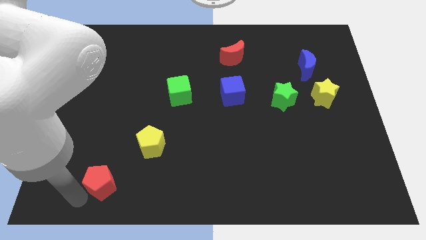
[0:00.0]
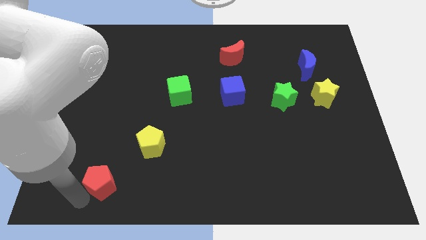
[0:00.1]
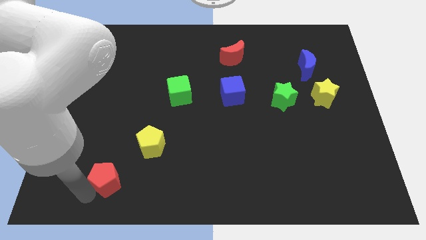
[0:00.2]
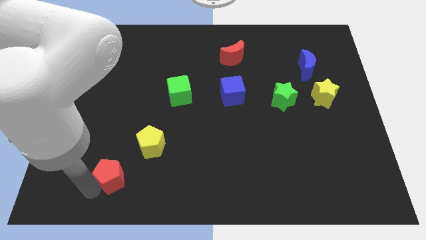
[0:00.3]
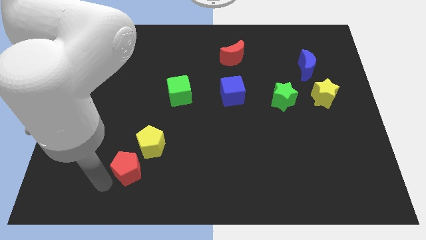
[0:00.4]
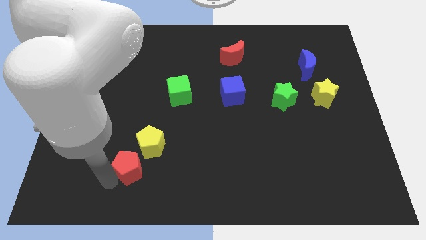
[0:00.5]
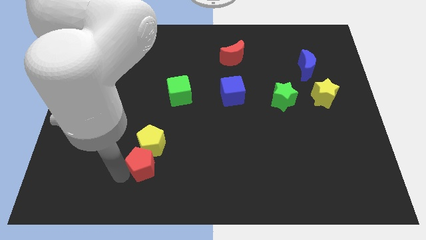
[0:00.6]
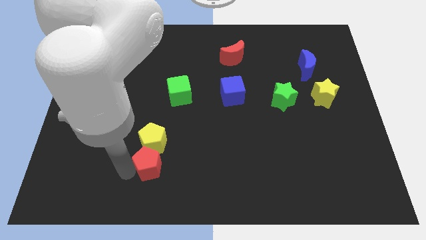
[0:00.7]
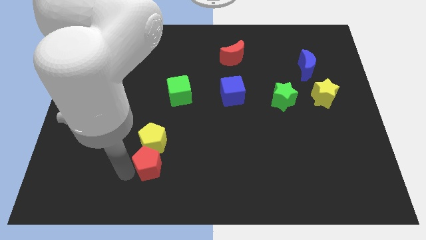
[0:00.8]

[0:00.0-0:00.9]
move the red pentagon below the yellow pentagon

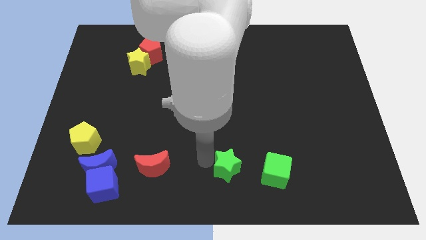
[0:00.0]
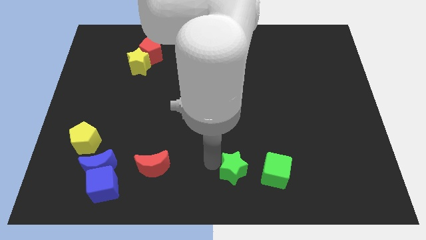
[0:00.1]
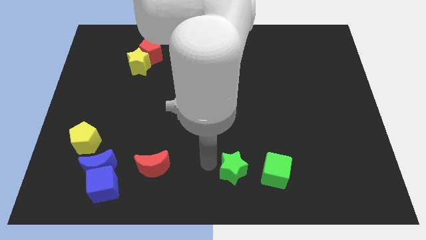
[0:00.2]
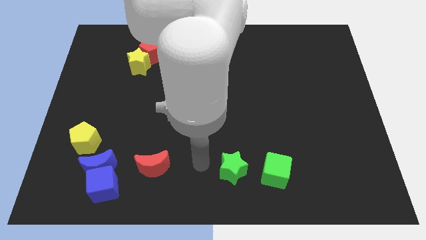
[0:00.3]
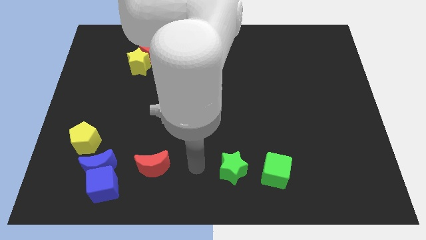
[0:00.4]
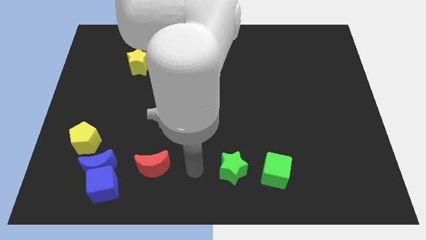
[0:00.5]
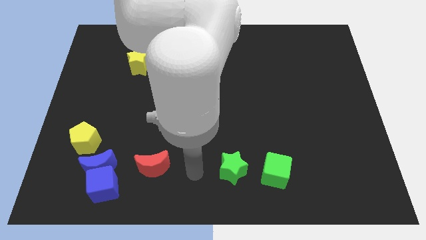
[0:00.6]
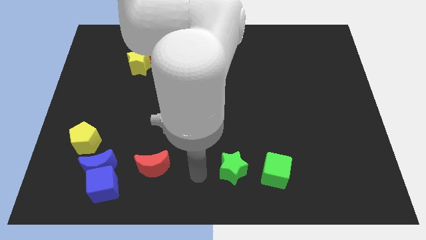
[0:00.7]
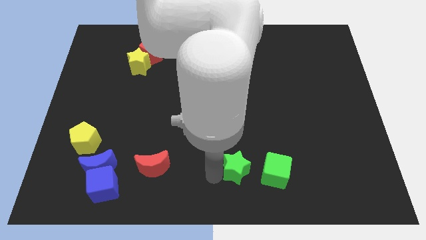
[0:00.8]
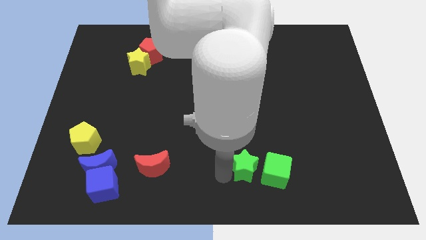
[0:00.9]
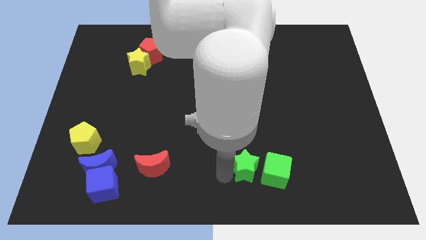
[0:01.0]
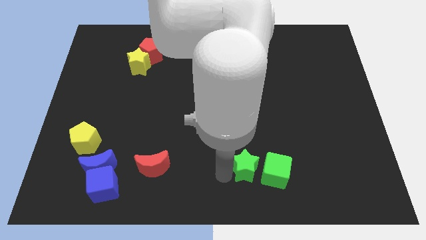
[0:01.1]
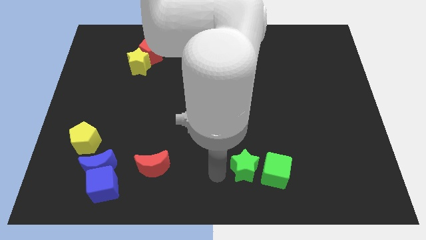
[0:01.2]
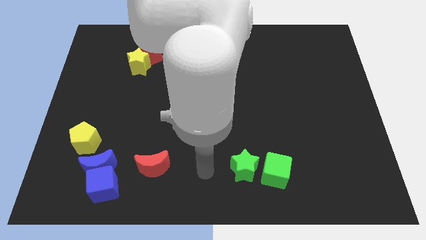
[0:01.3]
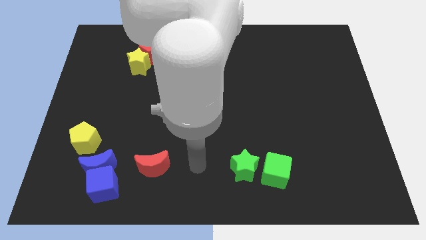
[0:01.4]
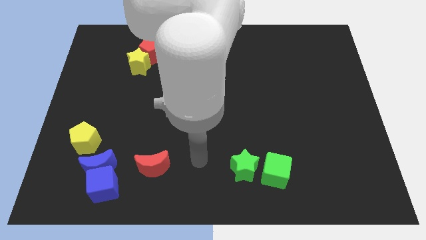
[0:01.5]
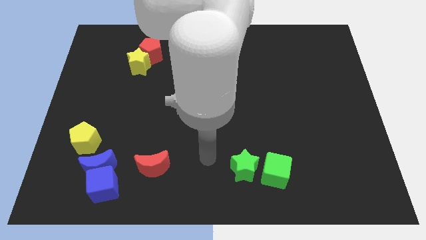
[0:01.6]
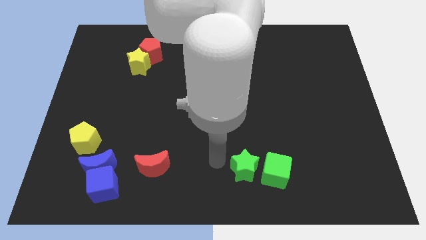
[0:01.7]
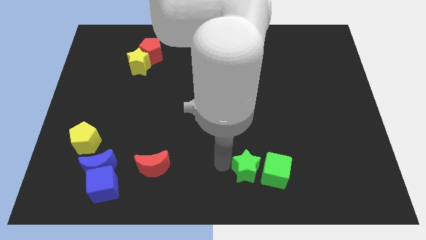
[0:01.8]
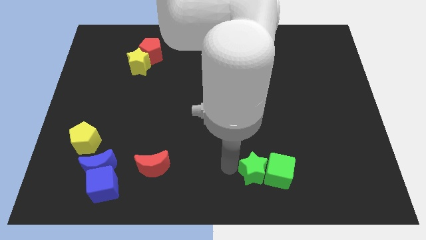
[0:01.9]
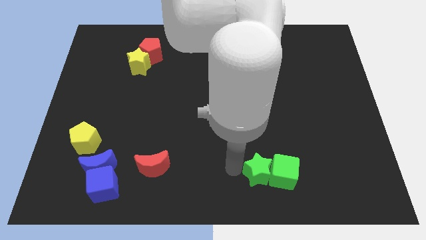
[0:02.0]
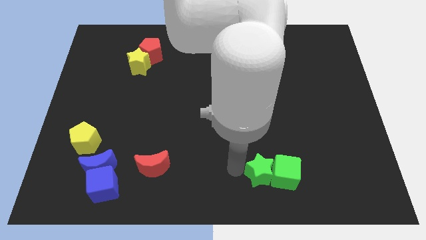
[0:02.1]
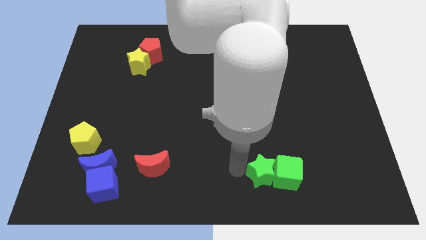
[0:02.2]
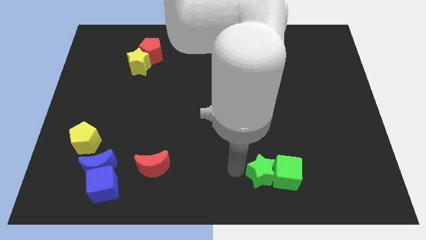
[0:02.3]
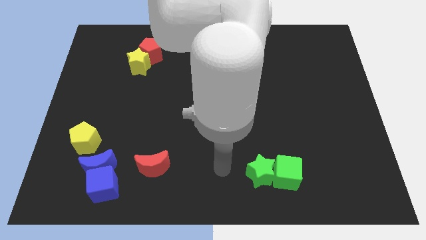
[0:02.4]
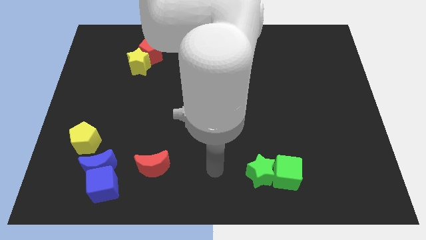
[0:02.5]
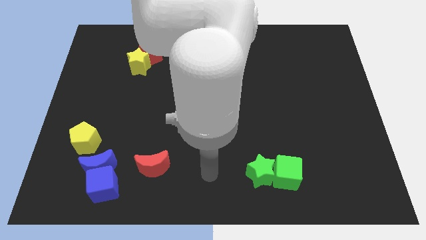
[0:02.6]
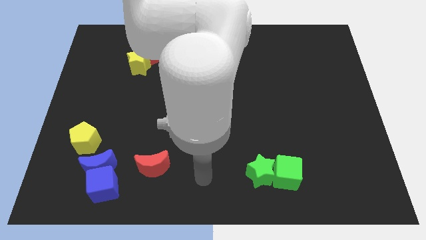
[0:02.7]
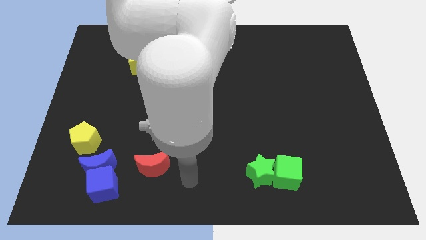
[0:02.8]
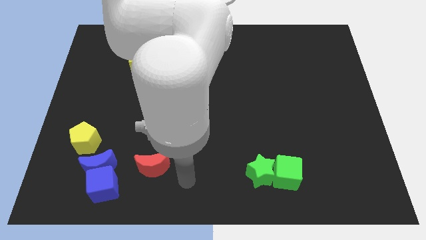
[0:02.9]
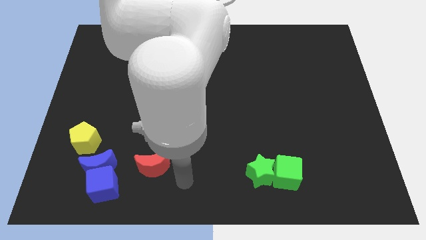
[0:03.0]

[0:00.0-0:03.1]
move the green star into the green cube

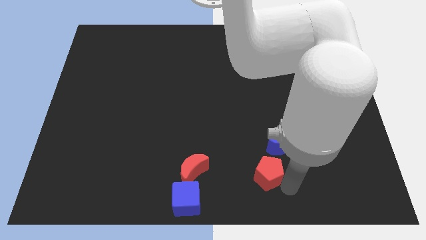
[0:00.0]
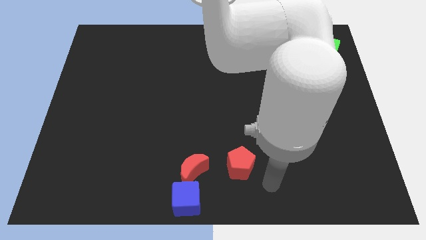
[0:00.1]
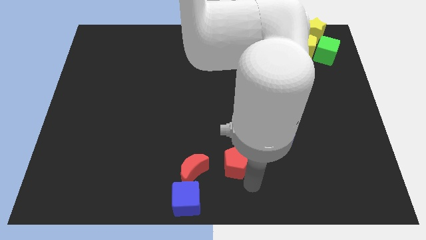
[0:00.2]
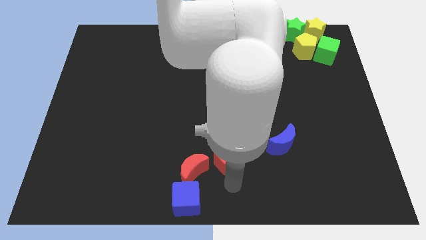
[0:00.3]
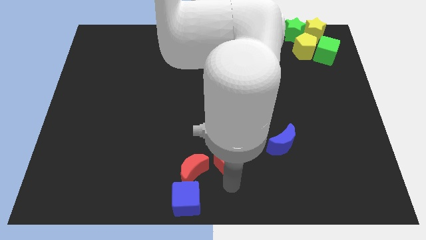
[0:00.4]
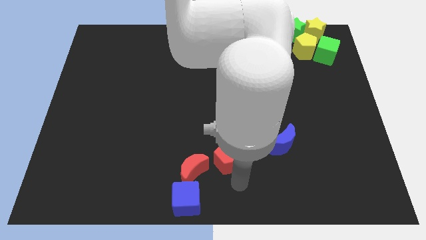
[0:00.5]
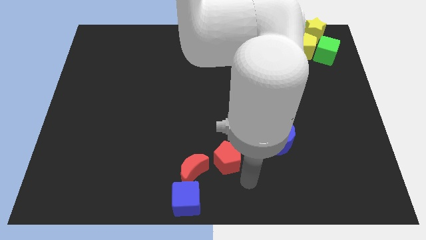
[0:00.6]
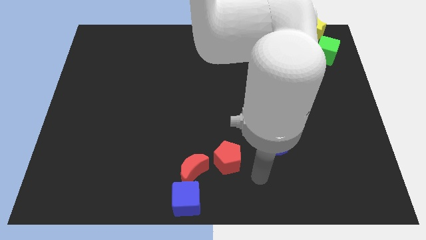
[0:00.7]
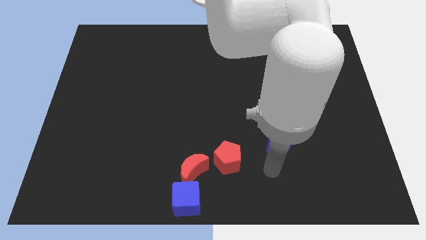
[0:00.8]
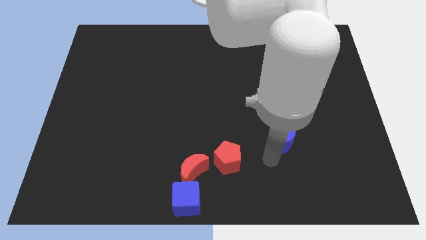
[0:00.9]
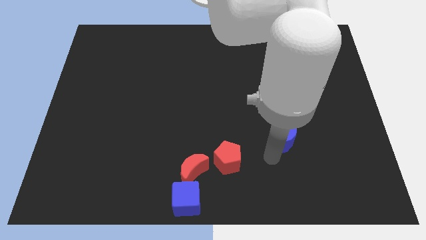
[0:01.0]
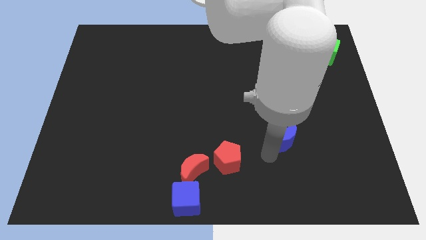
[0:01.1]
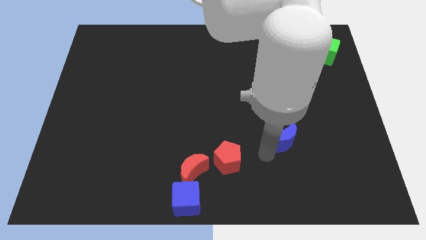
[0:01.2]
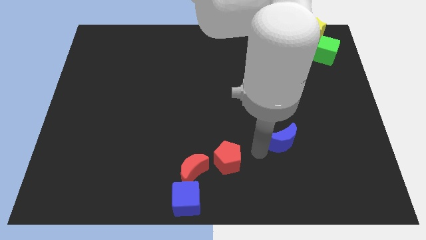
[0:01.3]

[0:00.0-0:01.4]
place the red pentagon to the right side of the red moon

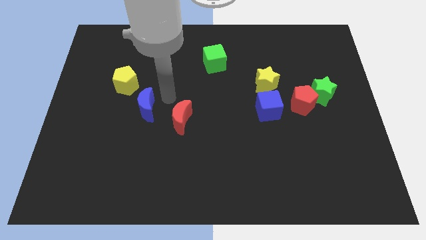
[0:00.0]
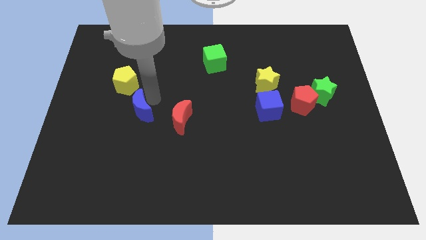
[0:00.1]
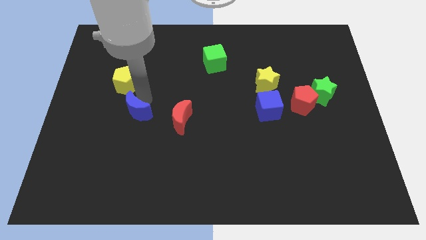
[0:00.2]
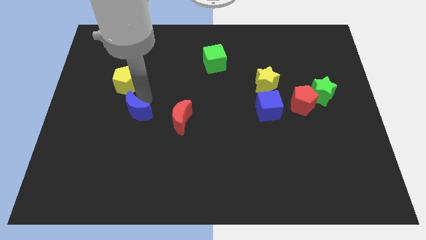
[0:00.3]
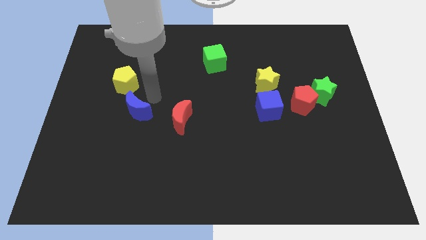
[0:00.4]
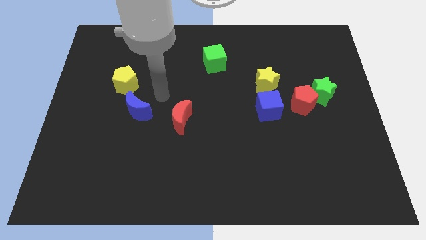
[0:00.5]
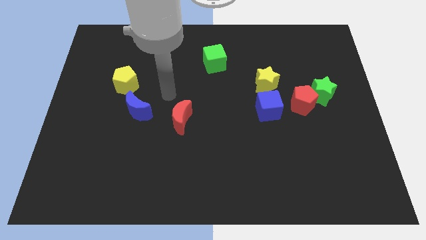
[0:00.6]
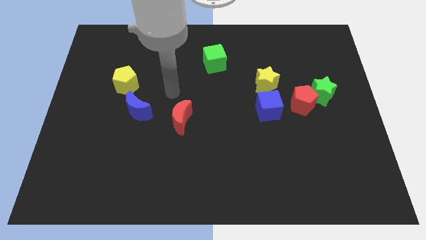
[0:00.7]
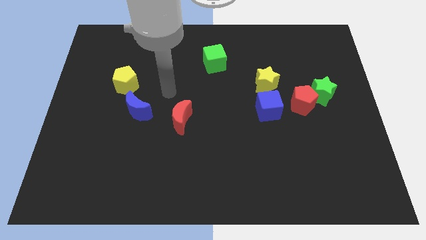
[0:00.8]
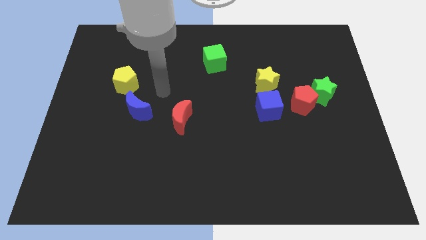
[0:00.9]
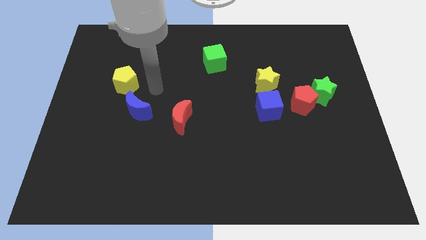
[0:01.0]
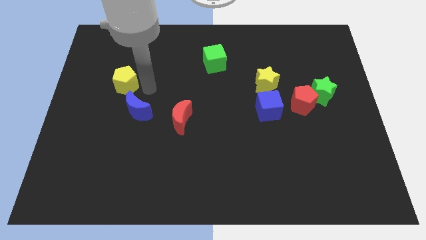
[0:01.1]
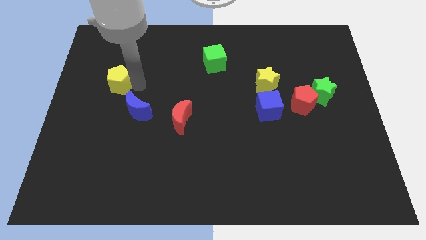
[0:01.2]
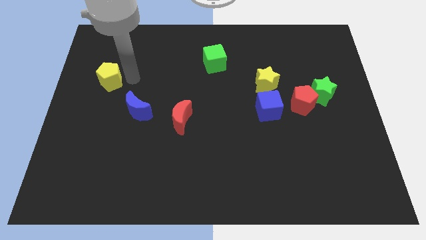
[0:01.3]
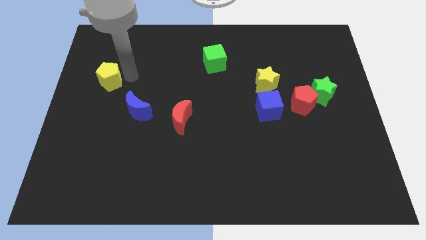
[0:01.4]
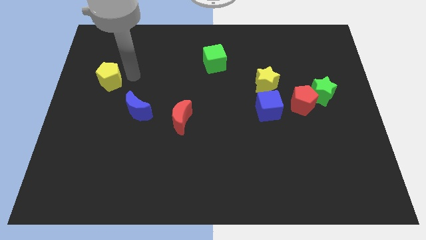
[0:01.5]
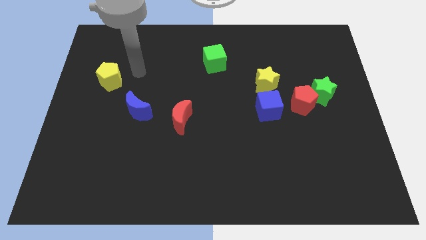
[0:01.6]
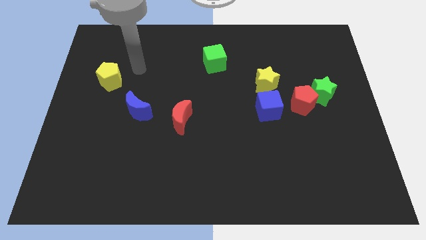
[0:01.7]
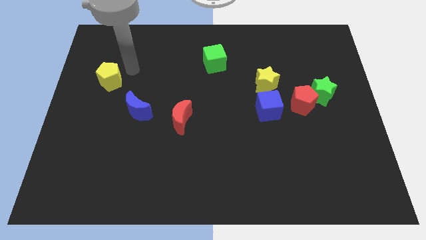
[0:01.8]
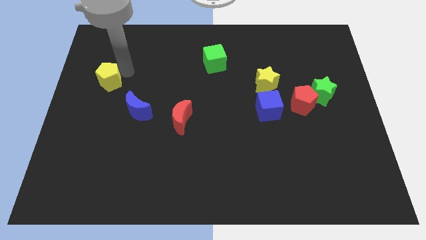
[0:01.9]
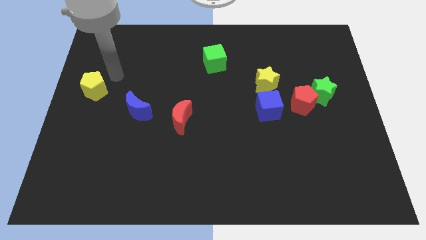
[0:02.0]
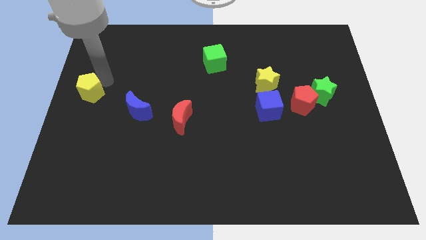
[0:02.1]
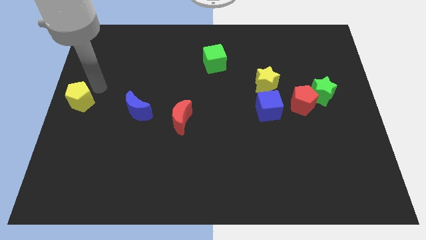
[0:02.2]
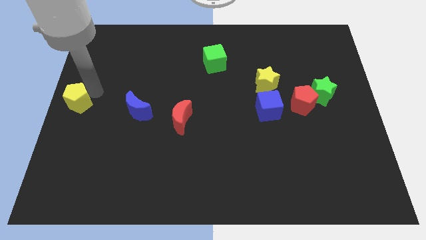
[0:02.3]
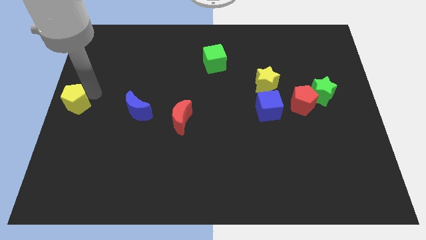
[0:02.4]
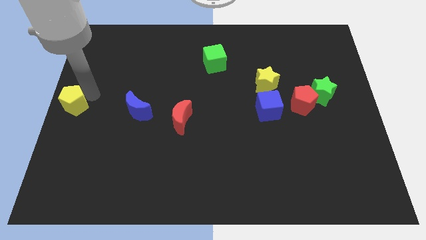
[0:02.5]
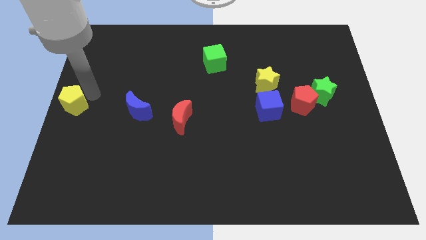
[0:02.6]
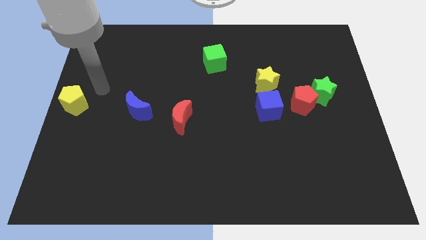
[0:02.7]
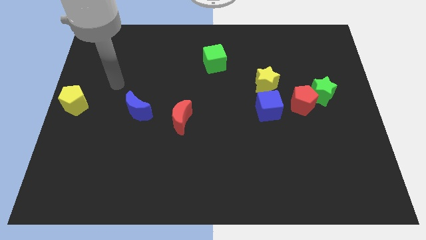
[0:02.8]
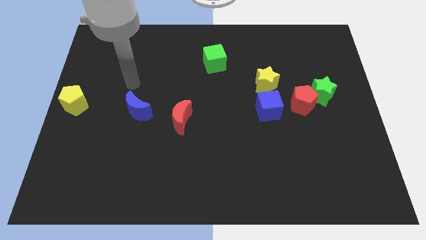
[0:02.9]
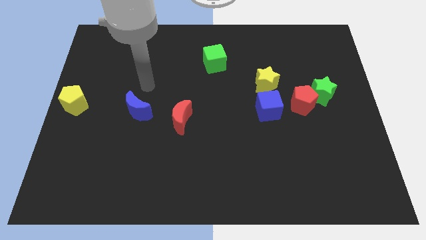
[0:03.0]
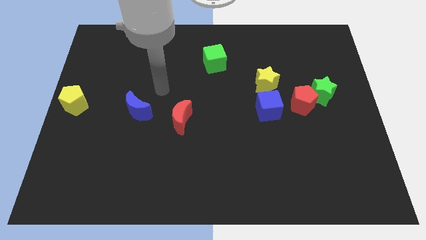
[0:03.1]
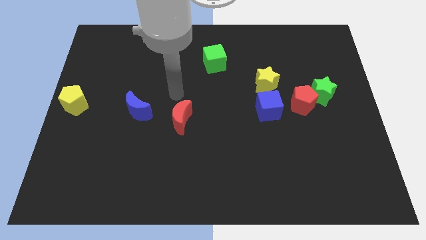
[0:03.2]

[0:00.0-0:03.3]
place the yellow pentagon at left center of the board
